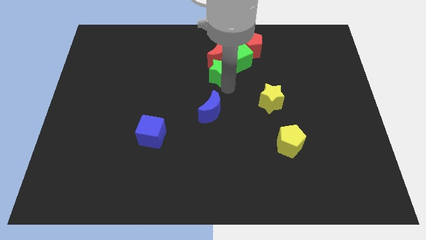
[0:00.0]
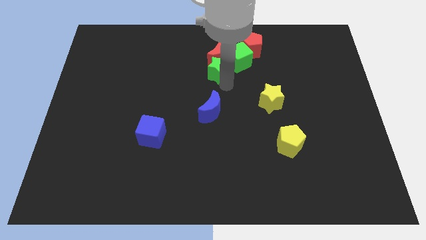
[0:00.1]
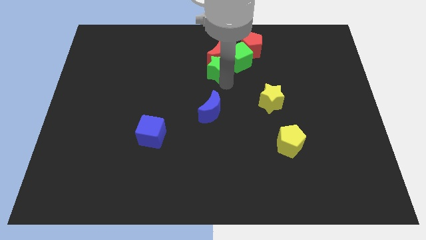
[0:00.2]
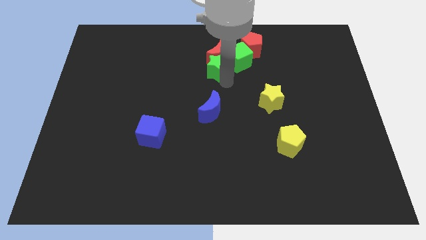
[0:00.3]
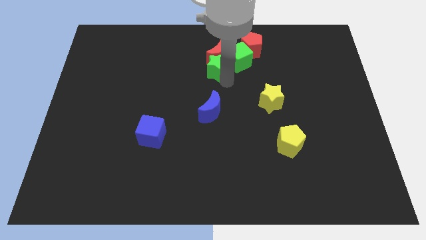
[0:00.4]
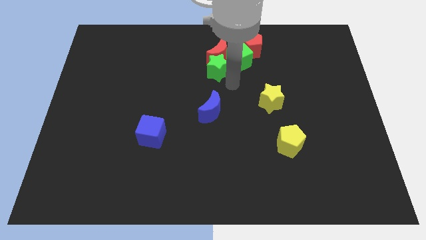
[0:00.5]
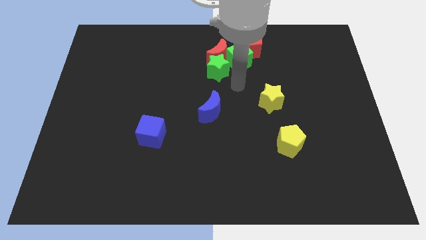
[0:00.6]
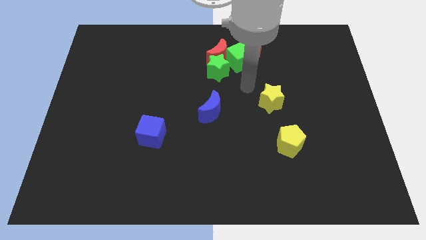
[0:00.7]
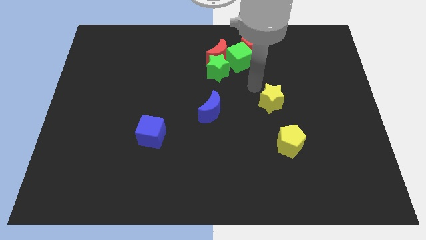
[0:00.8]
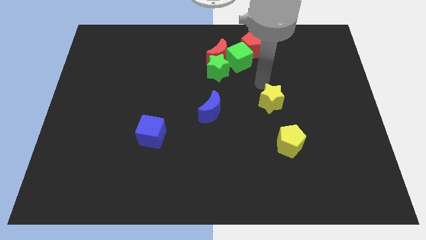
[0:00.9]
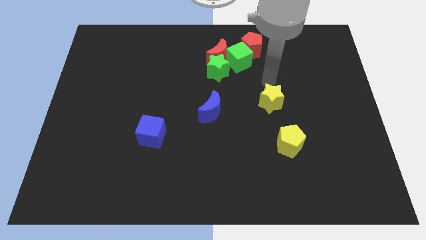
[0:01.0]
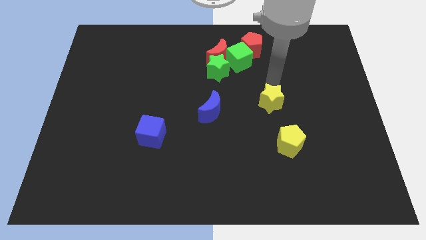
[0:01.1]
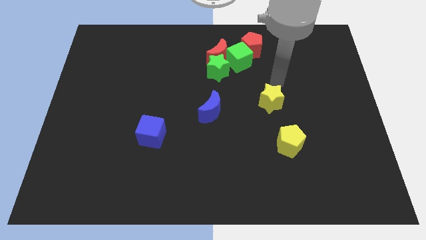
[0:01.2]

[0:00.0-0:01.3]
move green star below the red crescent

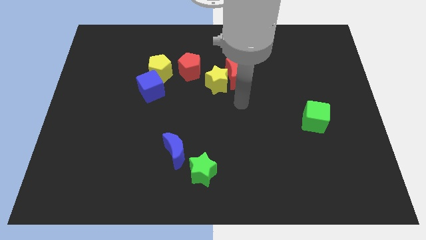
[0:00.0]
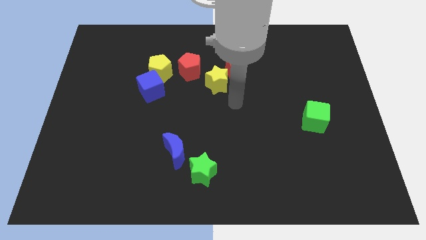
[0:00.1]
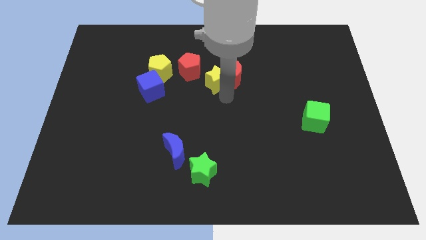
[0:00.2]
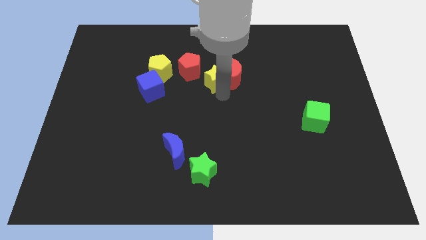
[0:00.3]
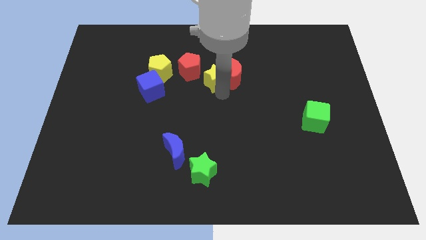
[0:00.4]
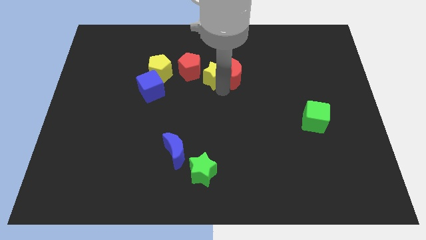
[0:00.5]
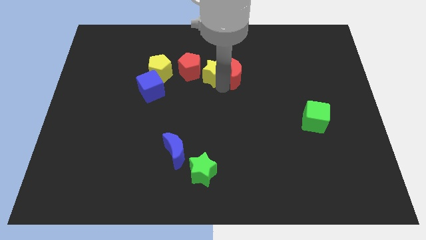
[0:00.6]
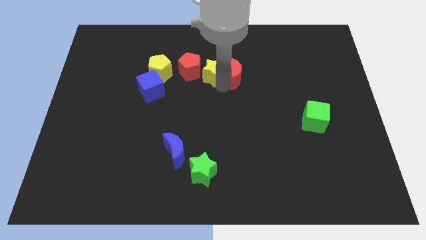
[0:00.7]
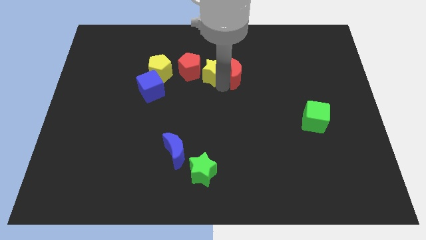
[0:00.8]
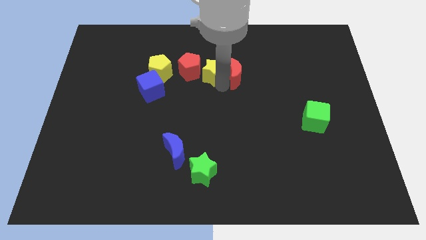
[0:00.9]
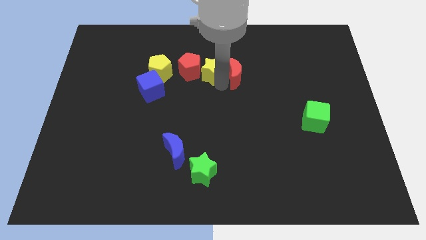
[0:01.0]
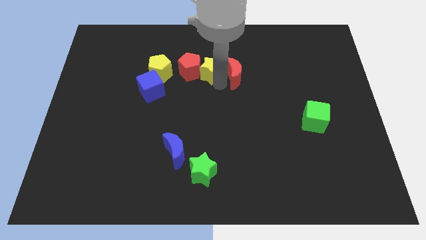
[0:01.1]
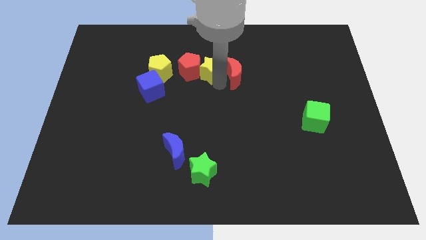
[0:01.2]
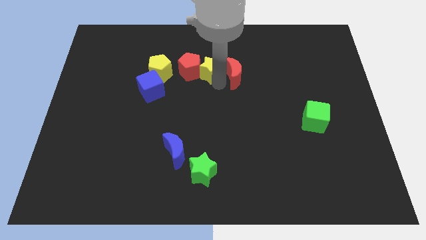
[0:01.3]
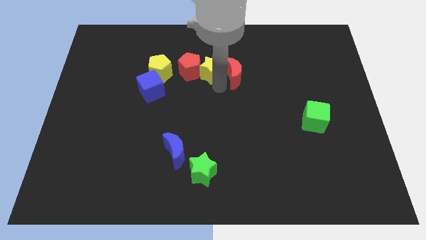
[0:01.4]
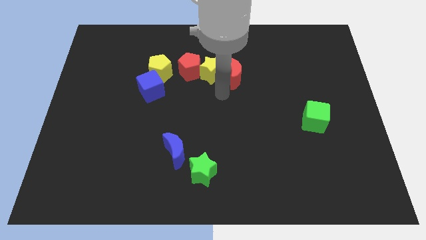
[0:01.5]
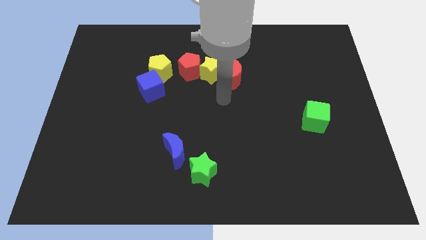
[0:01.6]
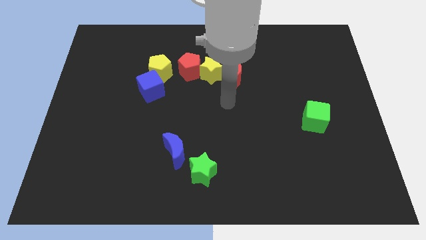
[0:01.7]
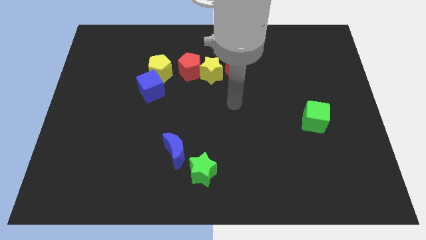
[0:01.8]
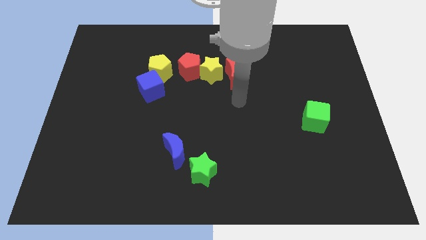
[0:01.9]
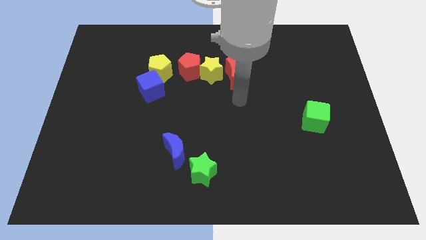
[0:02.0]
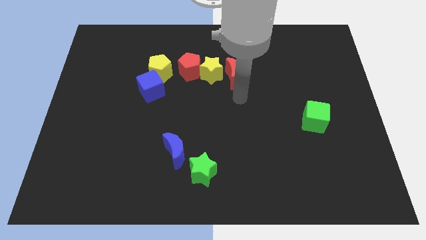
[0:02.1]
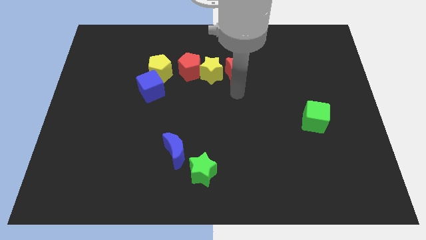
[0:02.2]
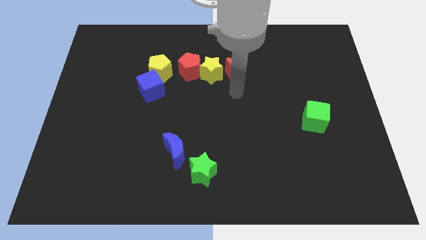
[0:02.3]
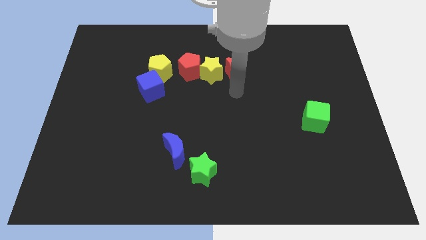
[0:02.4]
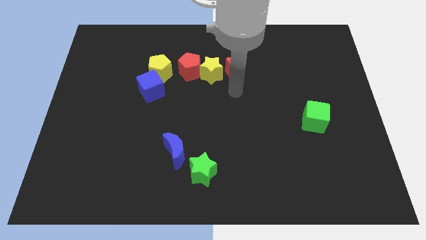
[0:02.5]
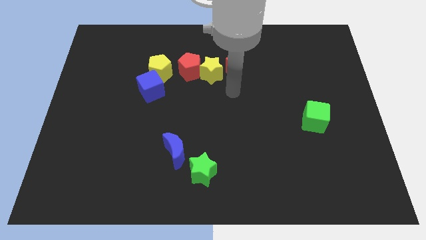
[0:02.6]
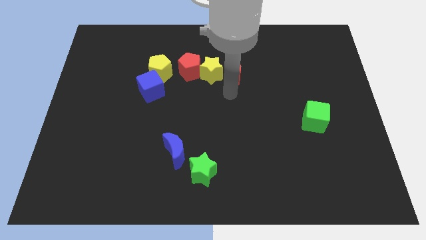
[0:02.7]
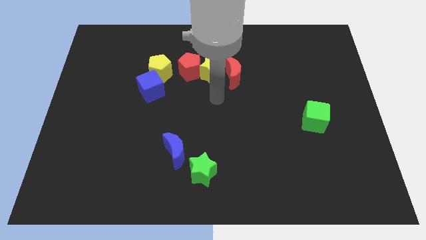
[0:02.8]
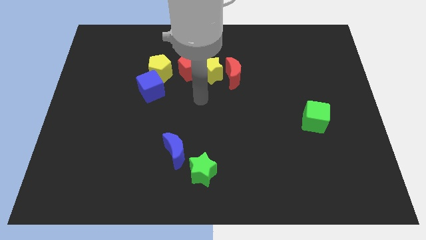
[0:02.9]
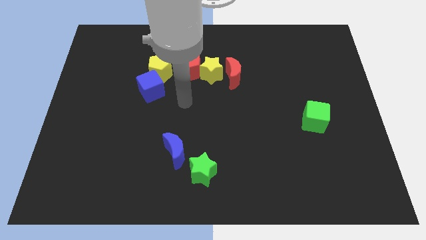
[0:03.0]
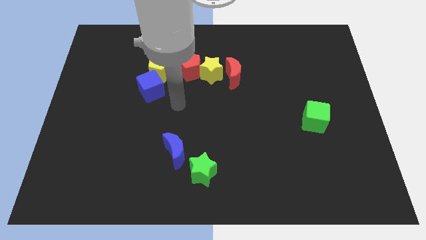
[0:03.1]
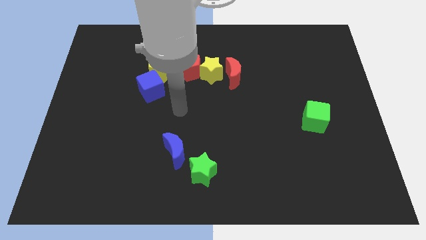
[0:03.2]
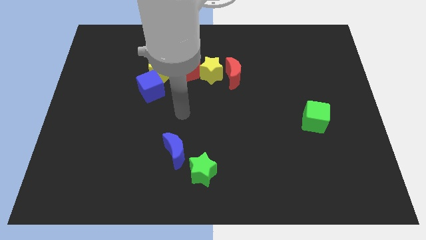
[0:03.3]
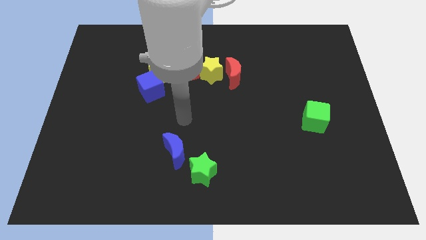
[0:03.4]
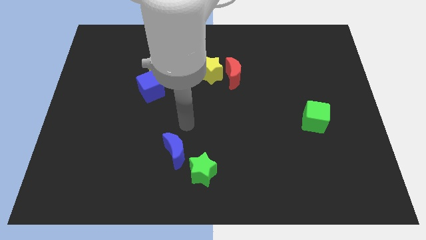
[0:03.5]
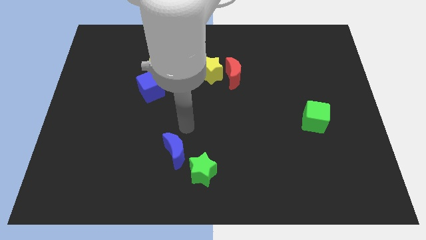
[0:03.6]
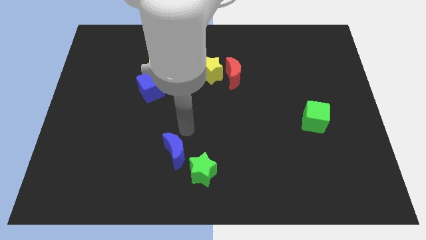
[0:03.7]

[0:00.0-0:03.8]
move the yellow star right to the red pentagon

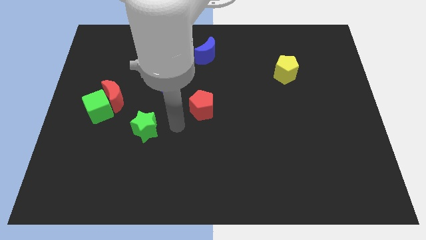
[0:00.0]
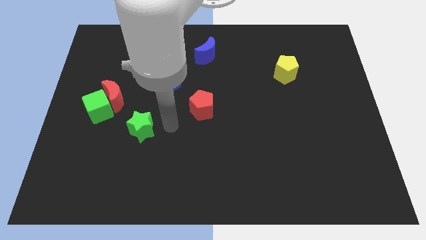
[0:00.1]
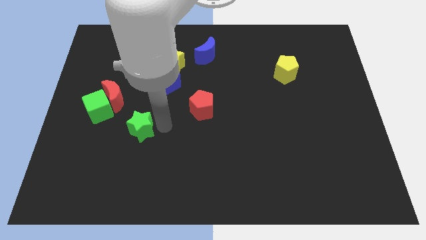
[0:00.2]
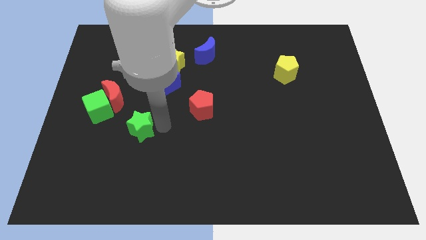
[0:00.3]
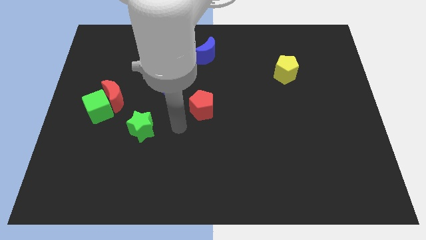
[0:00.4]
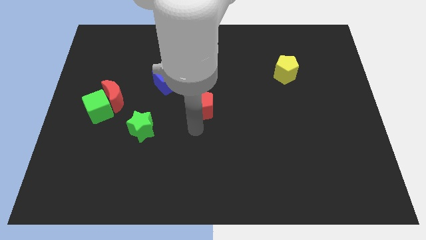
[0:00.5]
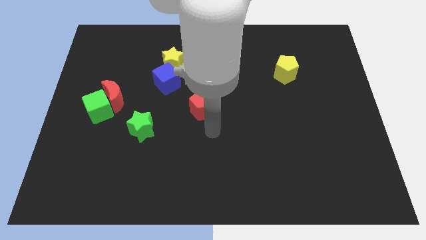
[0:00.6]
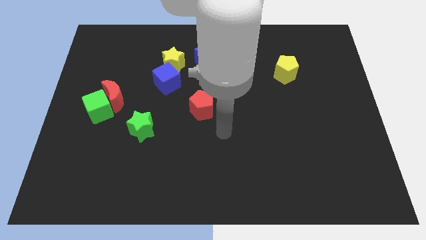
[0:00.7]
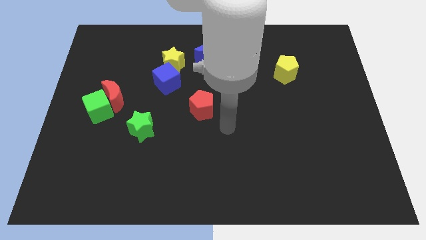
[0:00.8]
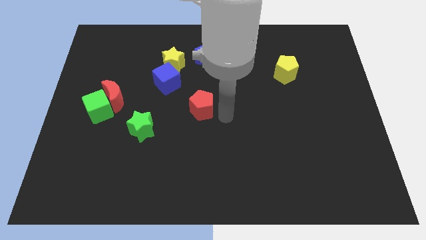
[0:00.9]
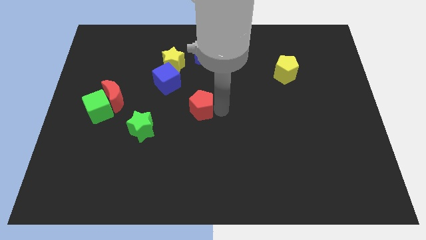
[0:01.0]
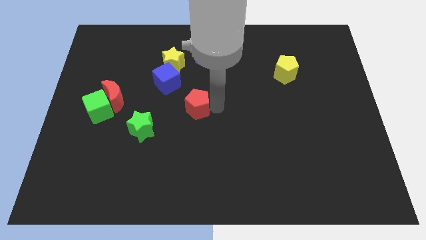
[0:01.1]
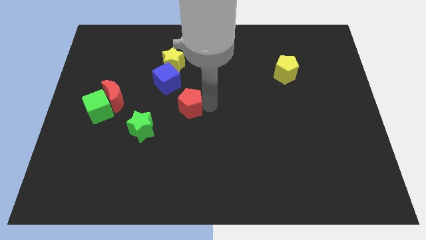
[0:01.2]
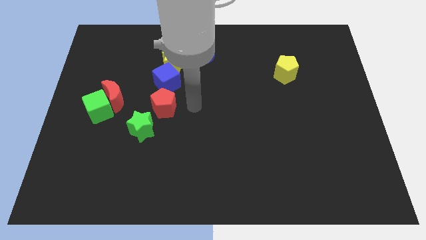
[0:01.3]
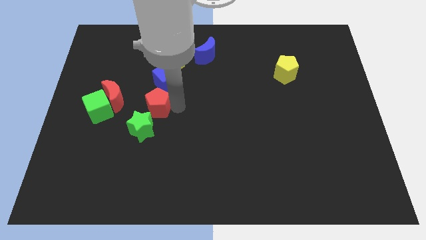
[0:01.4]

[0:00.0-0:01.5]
place red pentagon to the bottom of blue cube

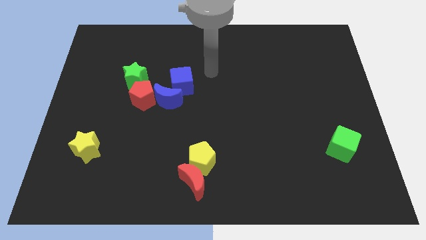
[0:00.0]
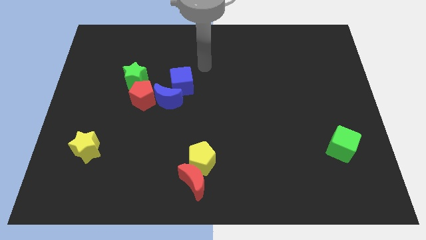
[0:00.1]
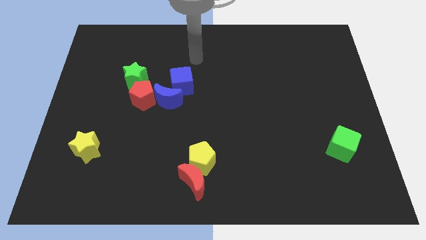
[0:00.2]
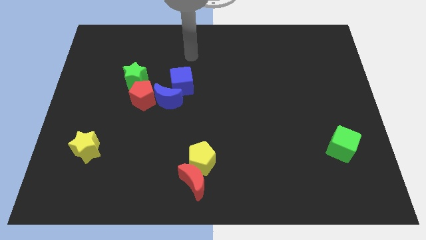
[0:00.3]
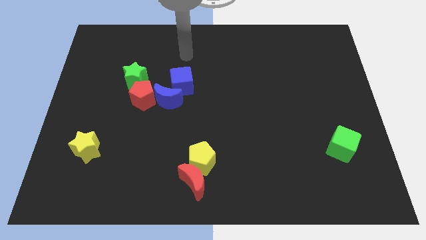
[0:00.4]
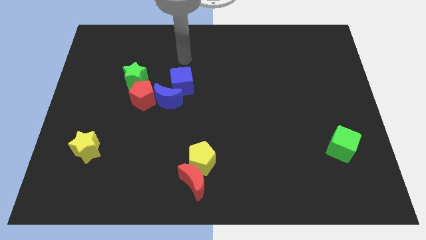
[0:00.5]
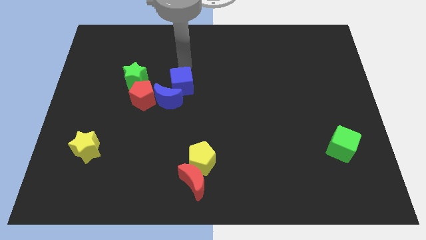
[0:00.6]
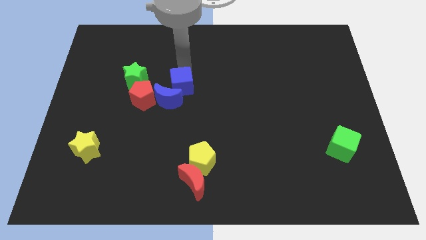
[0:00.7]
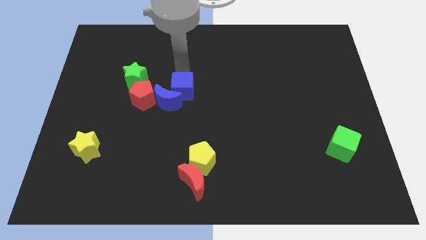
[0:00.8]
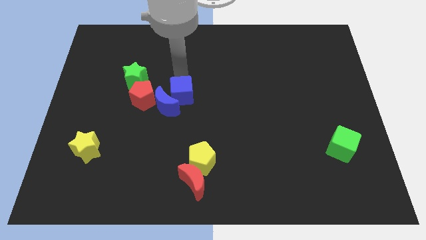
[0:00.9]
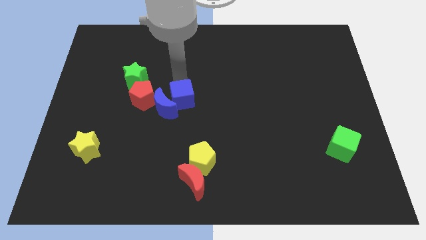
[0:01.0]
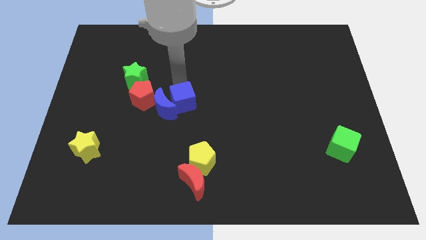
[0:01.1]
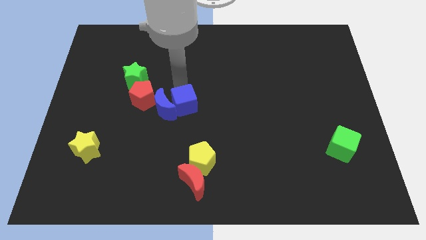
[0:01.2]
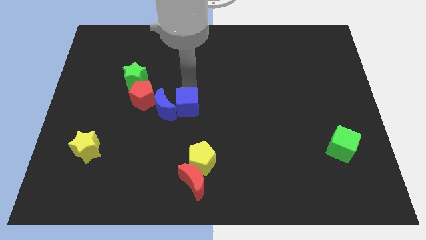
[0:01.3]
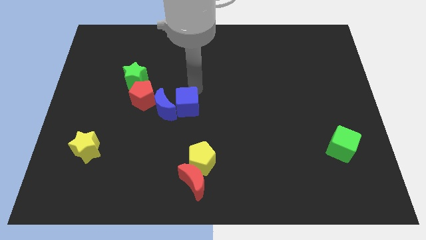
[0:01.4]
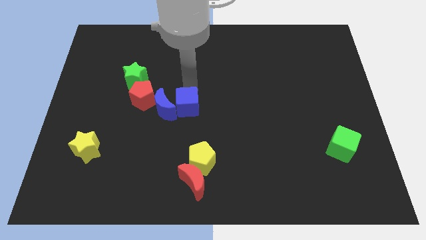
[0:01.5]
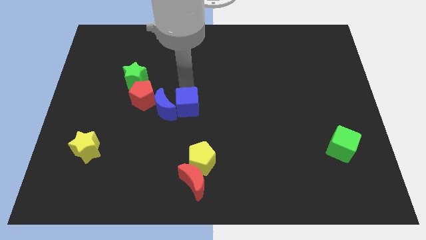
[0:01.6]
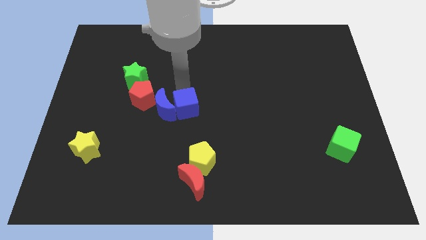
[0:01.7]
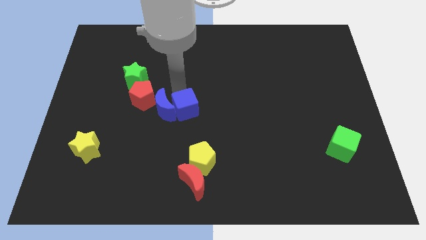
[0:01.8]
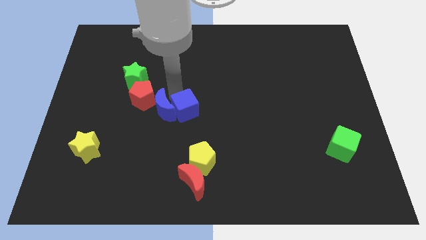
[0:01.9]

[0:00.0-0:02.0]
push the blue blocks to the right of red pentagon

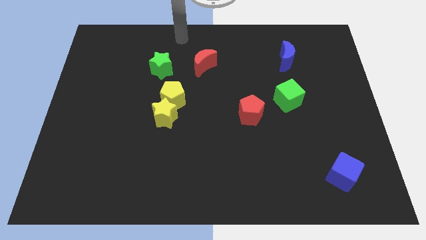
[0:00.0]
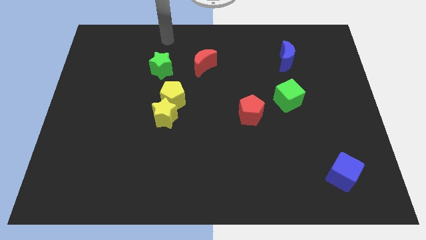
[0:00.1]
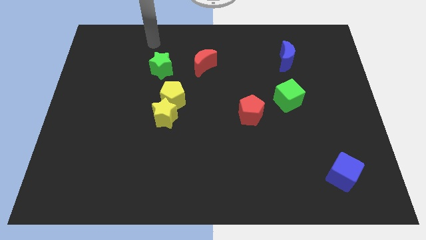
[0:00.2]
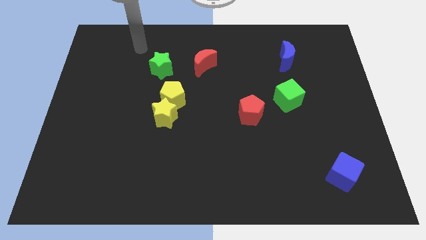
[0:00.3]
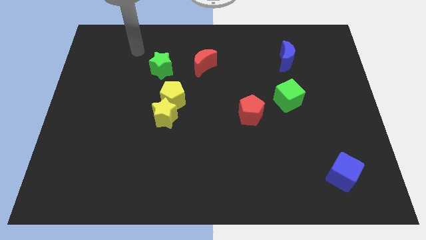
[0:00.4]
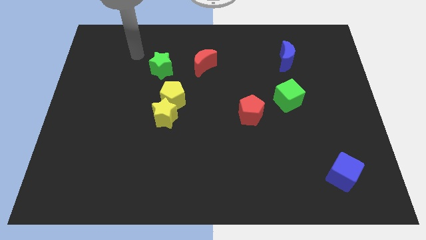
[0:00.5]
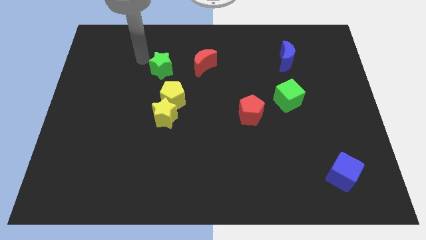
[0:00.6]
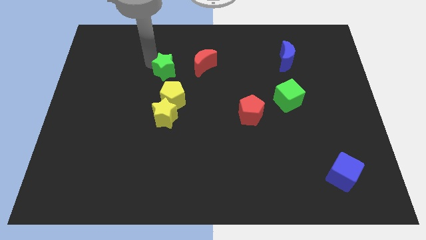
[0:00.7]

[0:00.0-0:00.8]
place arm on top of green star
